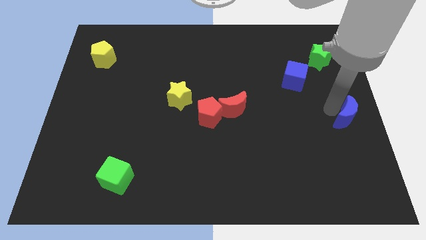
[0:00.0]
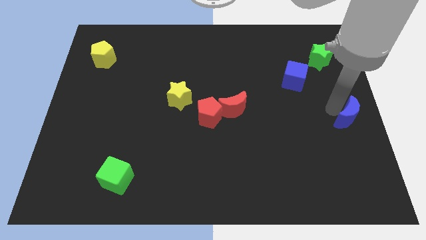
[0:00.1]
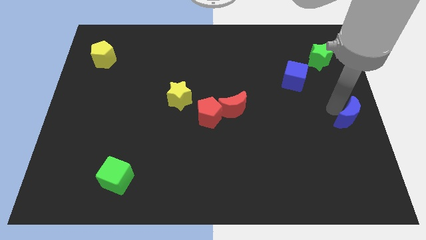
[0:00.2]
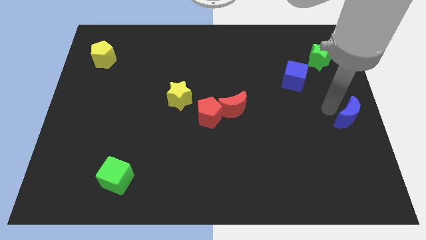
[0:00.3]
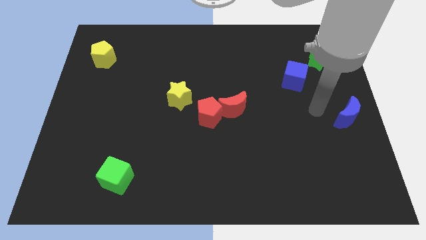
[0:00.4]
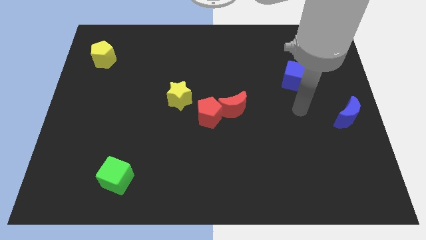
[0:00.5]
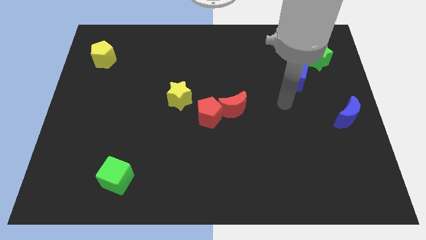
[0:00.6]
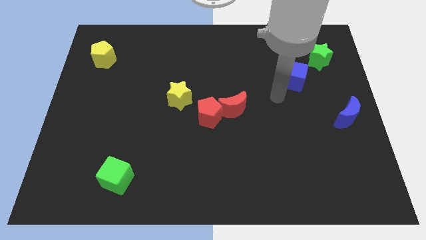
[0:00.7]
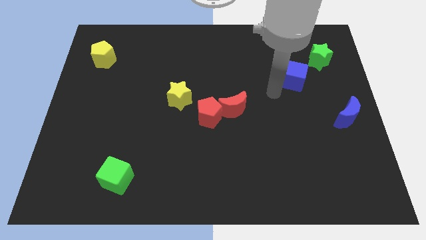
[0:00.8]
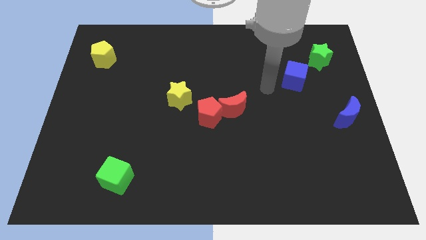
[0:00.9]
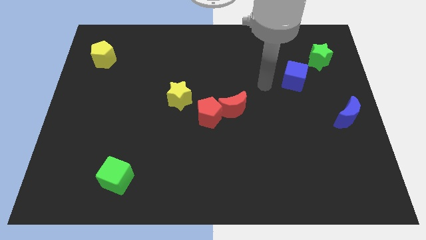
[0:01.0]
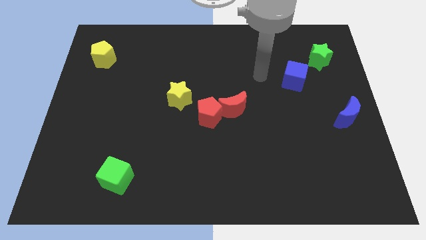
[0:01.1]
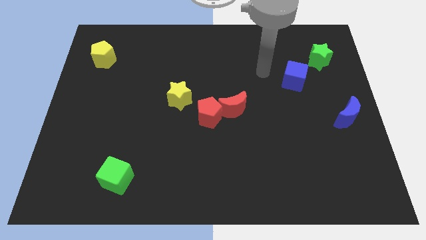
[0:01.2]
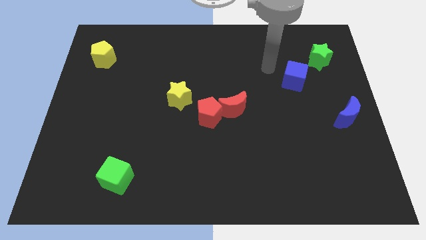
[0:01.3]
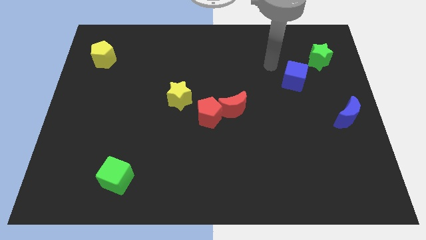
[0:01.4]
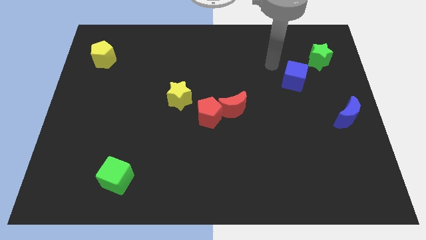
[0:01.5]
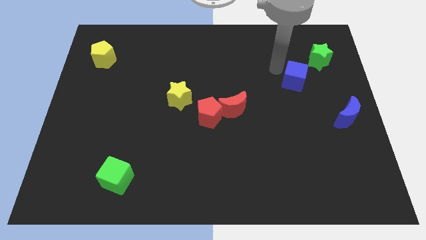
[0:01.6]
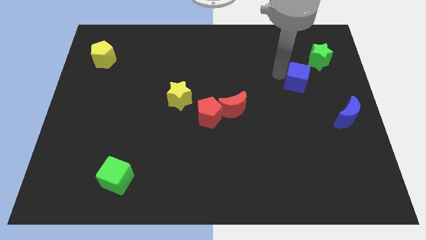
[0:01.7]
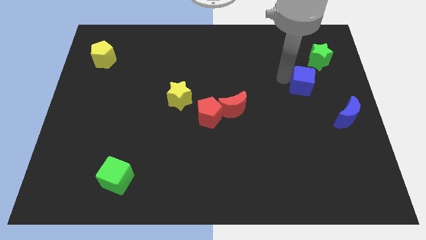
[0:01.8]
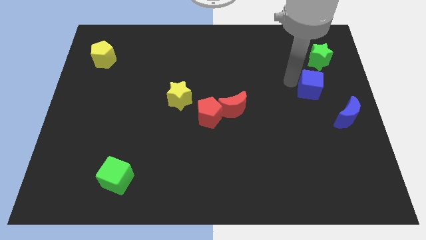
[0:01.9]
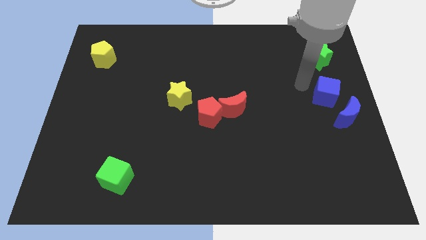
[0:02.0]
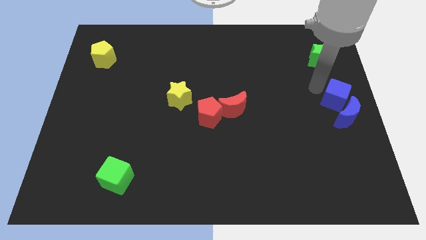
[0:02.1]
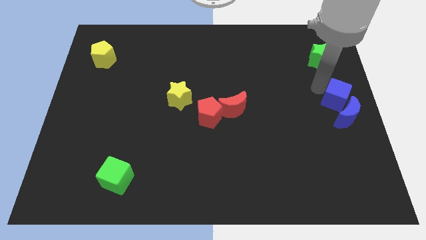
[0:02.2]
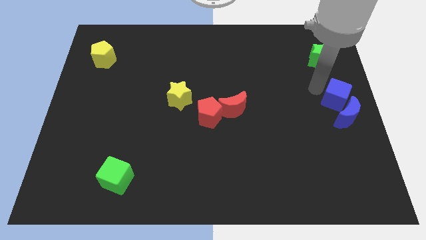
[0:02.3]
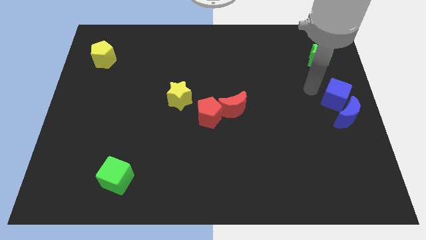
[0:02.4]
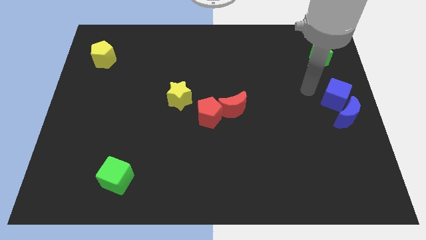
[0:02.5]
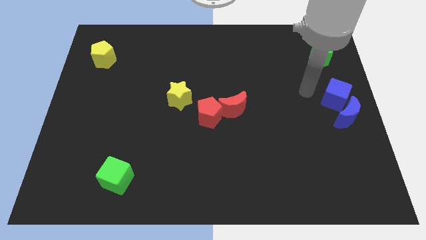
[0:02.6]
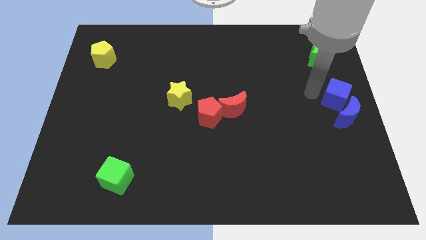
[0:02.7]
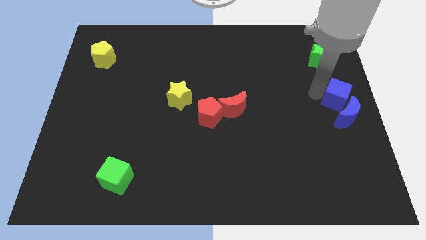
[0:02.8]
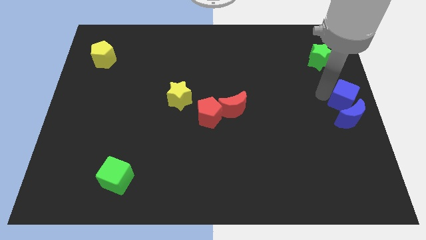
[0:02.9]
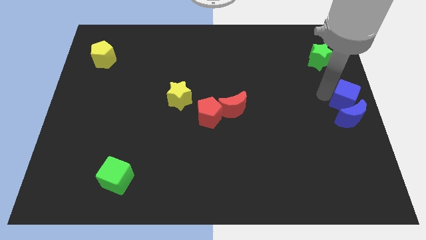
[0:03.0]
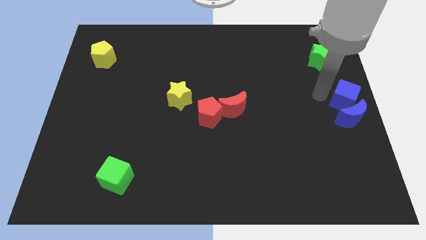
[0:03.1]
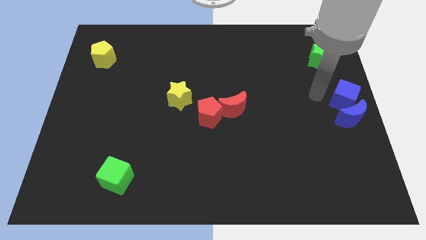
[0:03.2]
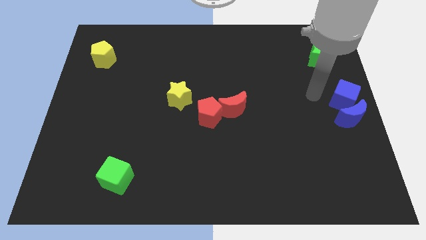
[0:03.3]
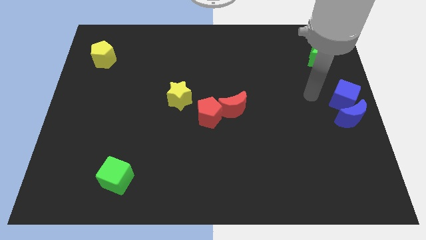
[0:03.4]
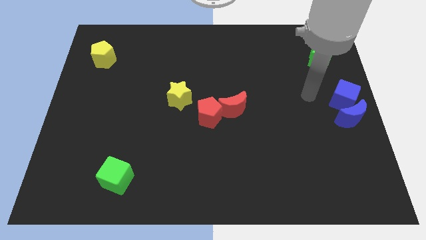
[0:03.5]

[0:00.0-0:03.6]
push the blue cube into the blue crescent

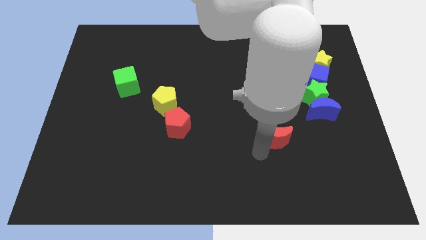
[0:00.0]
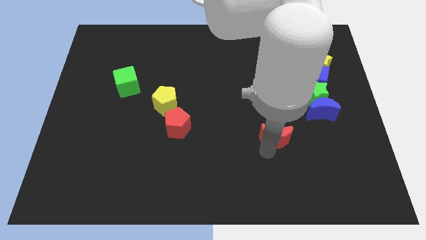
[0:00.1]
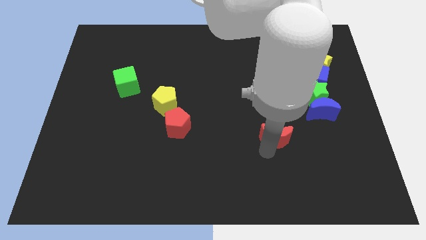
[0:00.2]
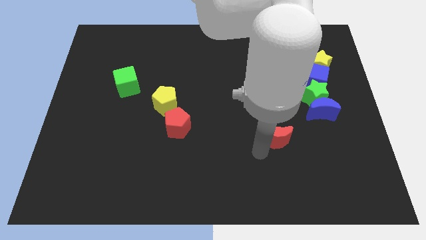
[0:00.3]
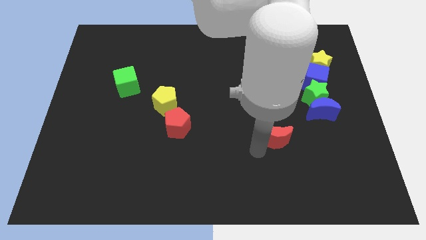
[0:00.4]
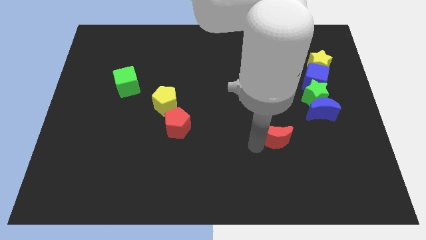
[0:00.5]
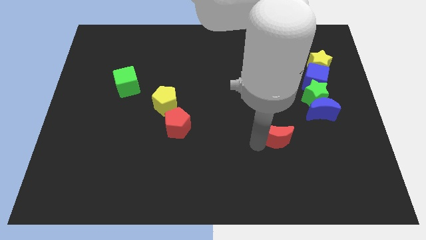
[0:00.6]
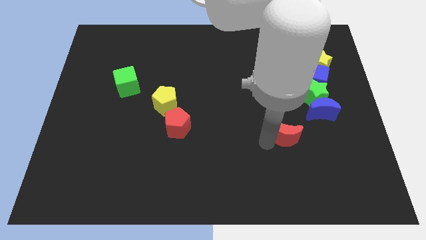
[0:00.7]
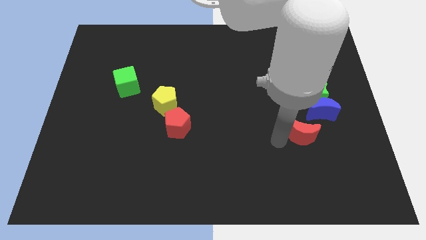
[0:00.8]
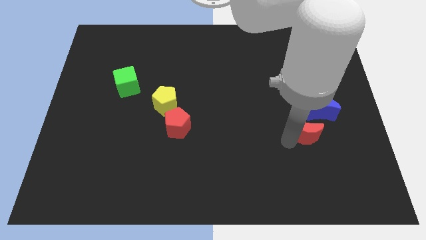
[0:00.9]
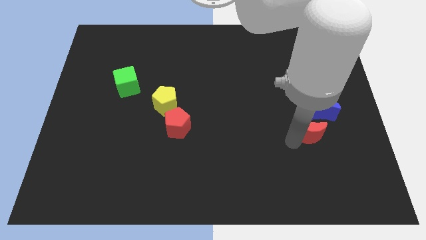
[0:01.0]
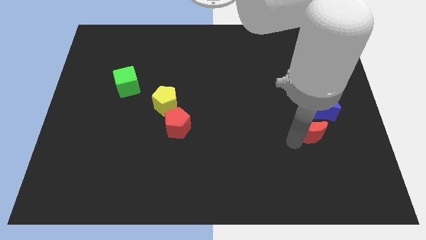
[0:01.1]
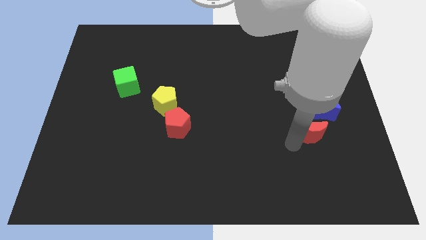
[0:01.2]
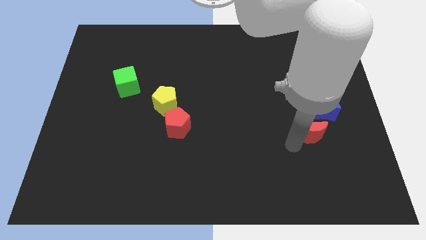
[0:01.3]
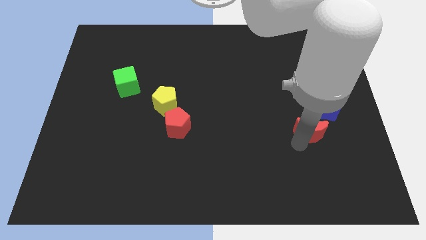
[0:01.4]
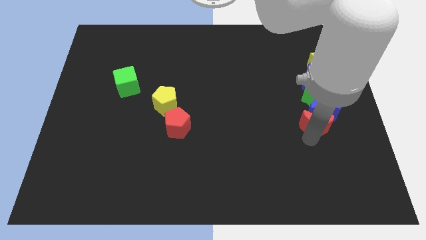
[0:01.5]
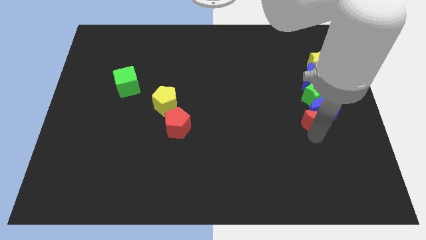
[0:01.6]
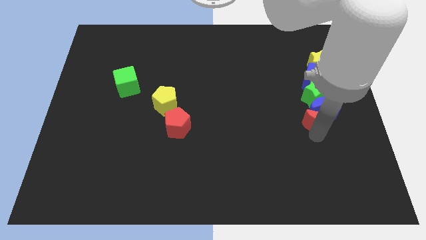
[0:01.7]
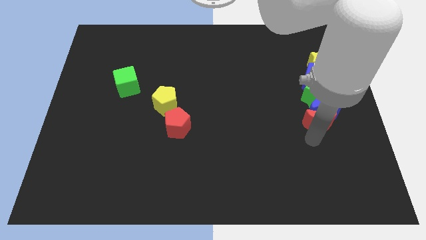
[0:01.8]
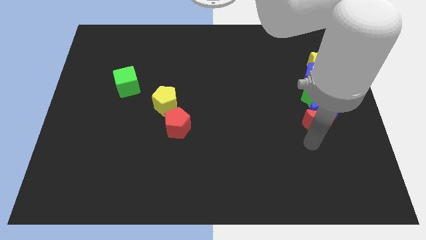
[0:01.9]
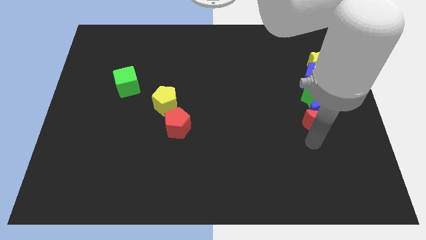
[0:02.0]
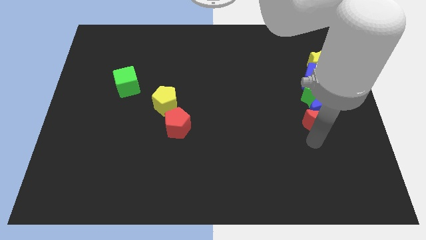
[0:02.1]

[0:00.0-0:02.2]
place the red crescent at the bottom of the blue crescent

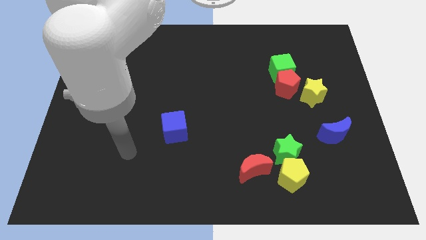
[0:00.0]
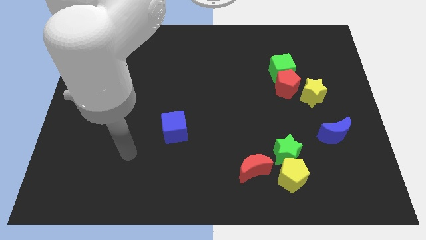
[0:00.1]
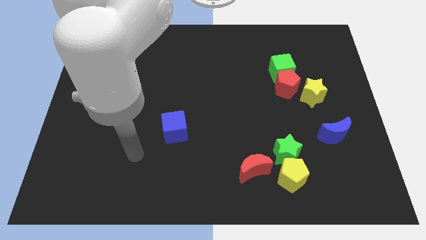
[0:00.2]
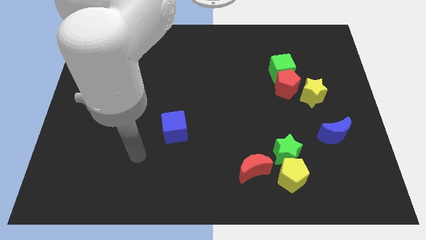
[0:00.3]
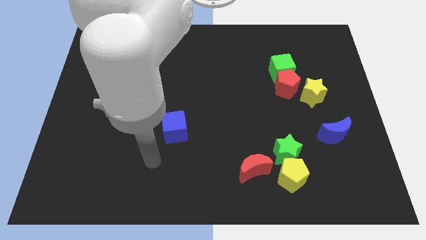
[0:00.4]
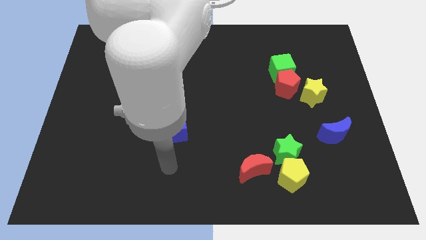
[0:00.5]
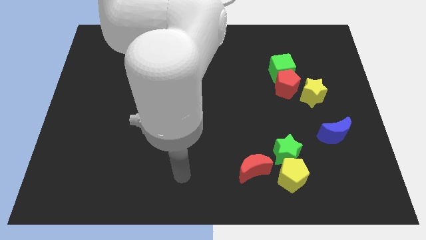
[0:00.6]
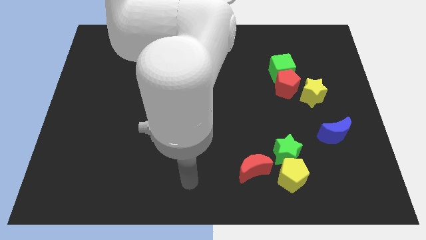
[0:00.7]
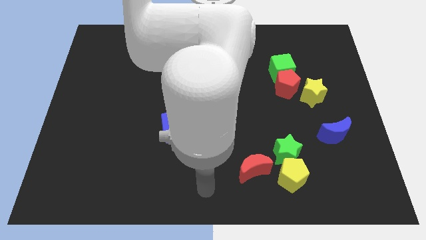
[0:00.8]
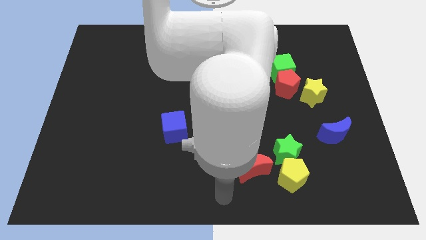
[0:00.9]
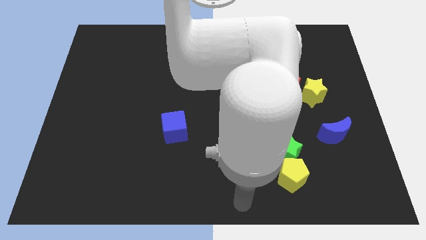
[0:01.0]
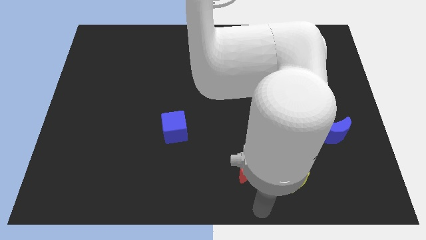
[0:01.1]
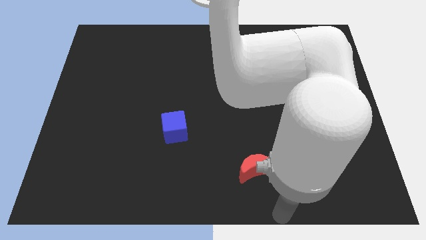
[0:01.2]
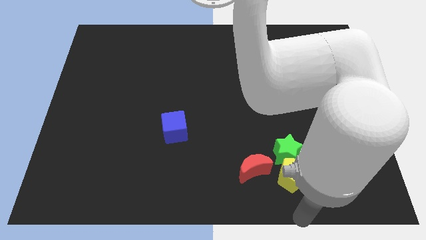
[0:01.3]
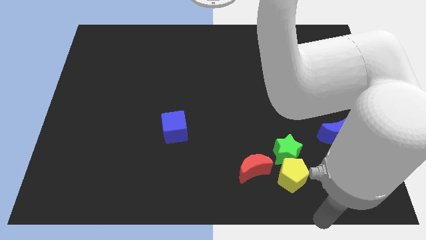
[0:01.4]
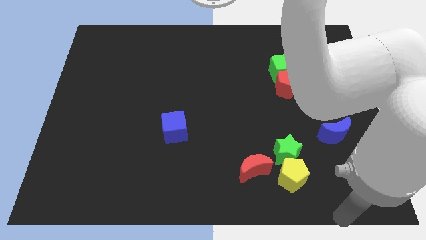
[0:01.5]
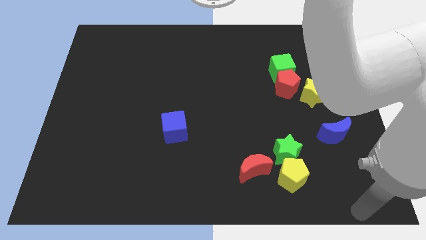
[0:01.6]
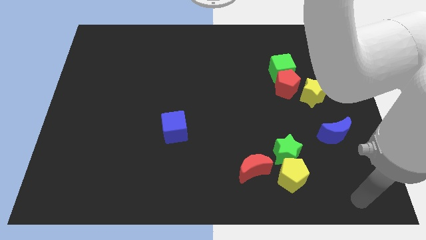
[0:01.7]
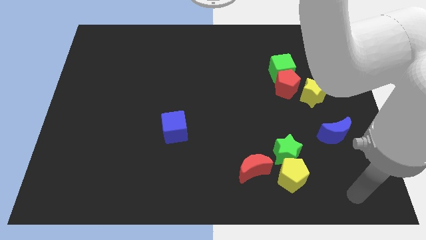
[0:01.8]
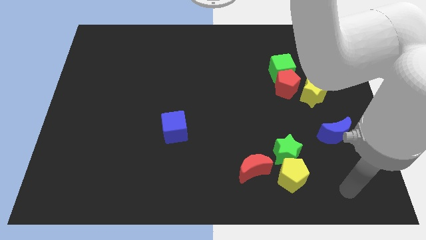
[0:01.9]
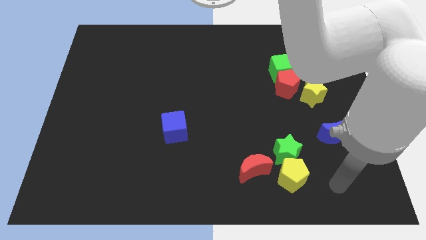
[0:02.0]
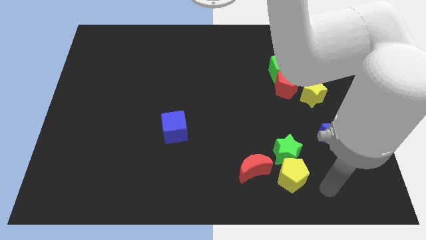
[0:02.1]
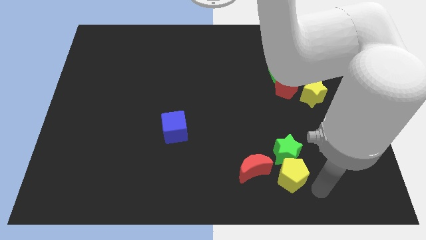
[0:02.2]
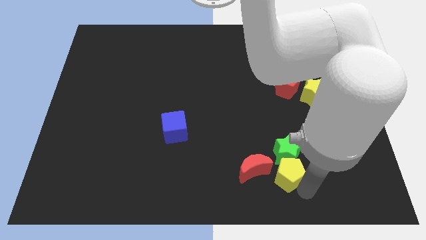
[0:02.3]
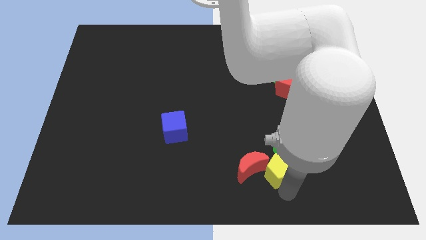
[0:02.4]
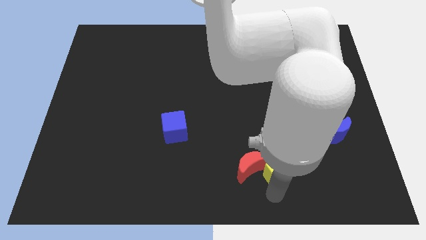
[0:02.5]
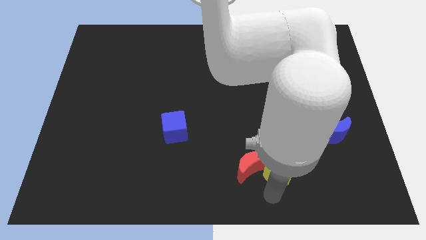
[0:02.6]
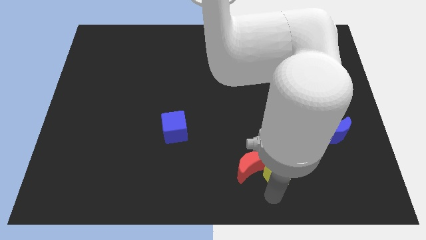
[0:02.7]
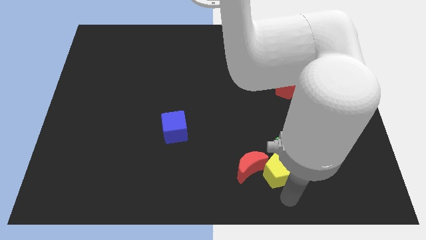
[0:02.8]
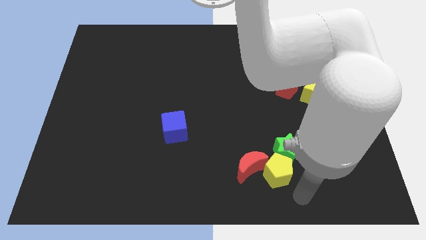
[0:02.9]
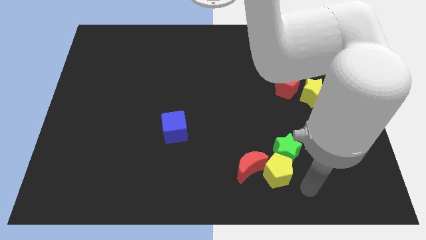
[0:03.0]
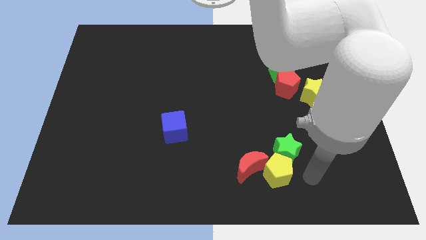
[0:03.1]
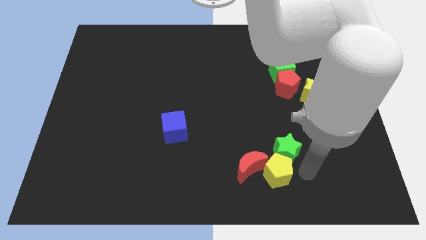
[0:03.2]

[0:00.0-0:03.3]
move the yellow pentagon to the bottom of the green star
